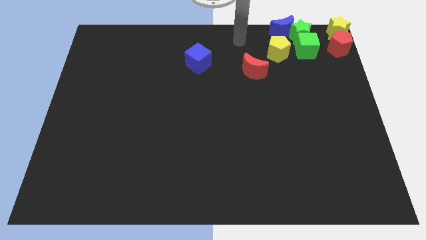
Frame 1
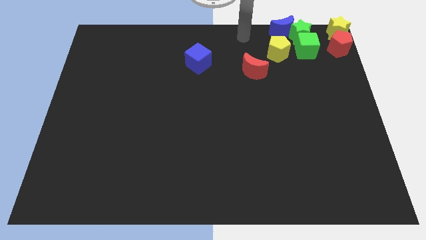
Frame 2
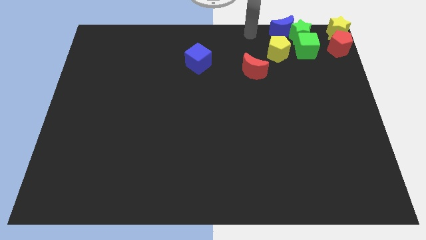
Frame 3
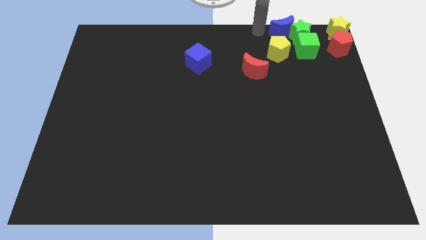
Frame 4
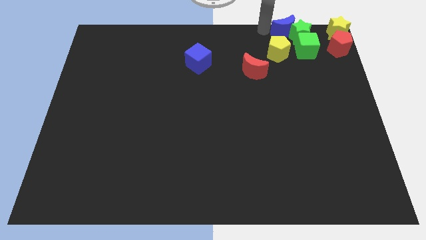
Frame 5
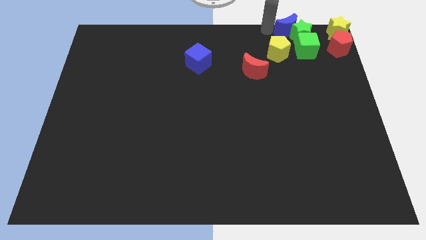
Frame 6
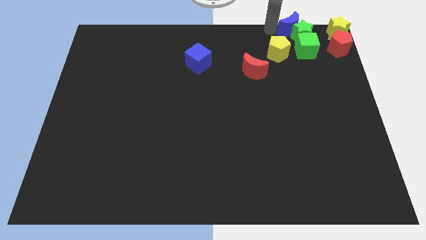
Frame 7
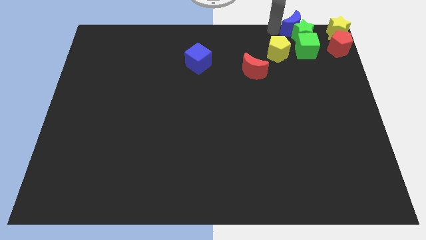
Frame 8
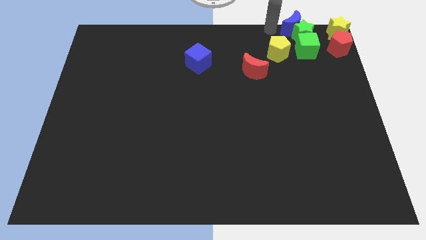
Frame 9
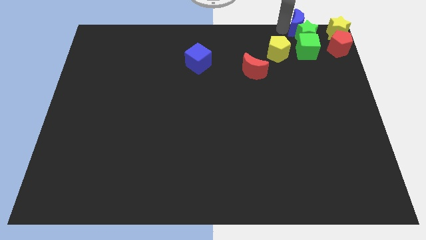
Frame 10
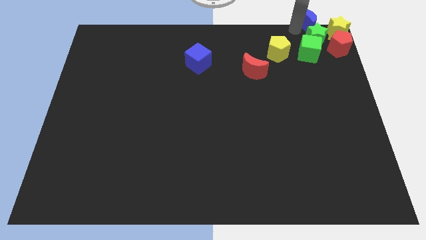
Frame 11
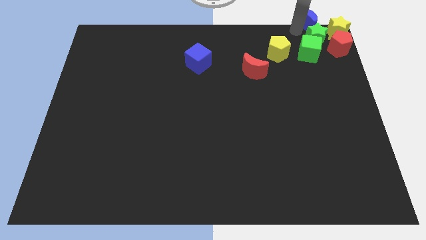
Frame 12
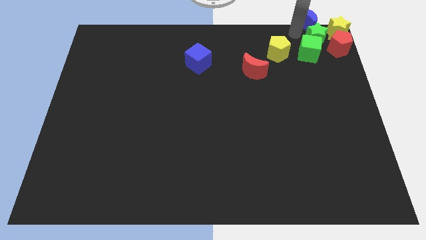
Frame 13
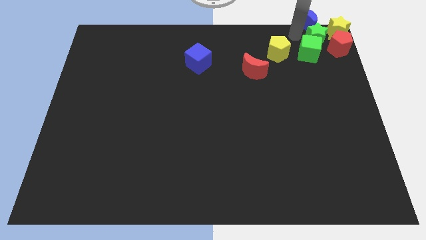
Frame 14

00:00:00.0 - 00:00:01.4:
place the blue moon above the green star

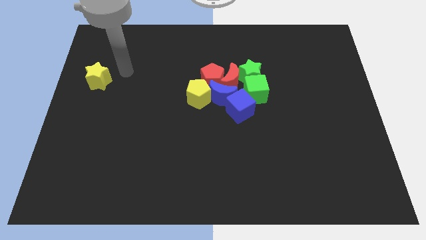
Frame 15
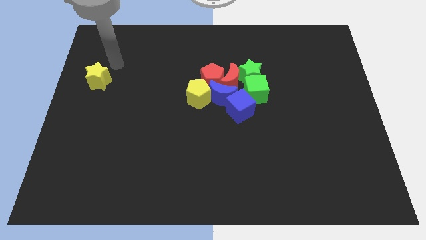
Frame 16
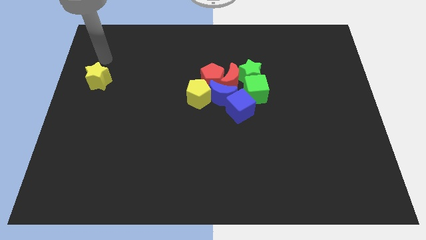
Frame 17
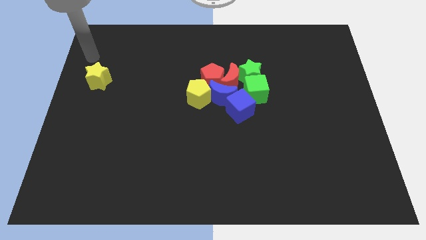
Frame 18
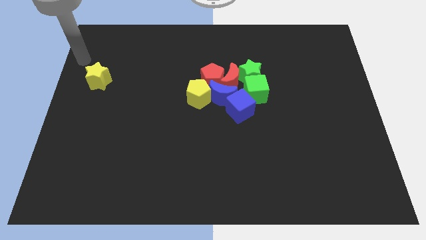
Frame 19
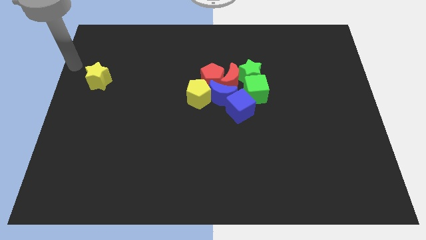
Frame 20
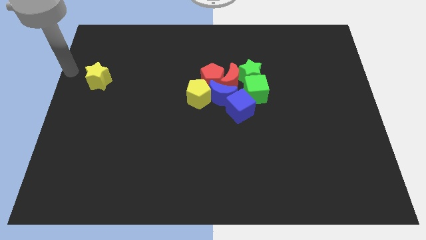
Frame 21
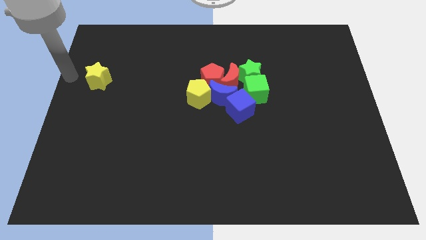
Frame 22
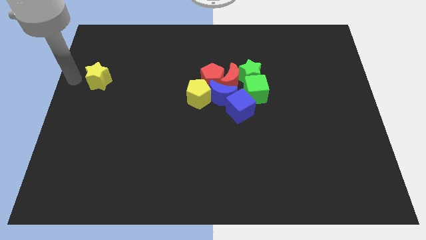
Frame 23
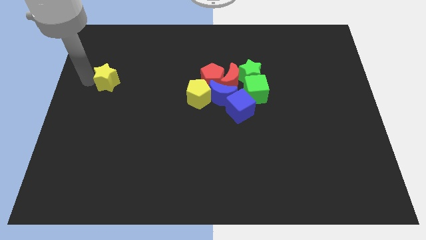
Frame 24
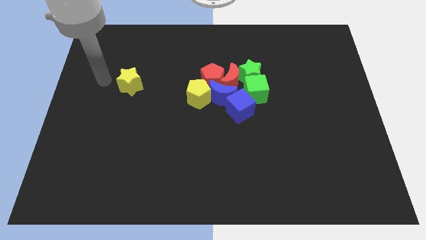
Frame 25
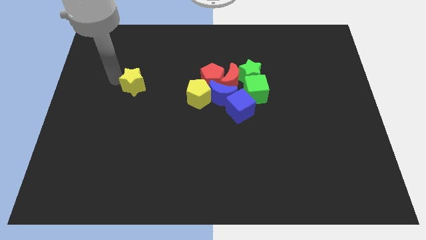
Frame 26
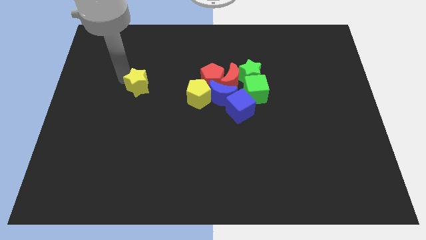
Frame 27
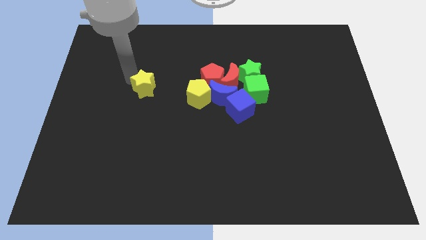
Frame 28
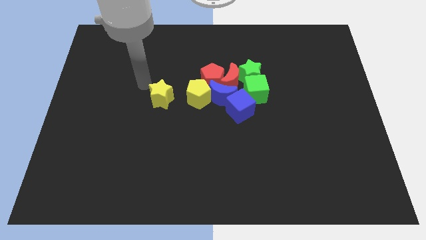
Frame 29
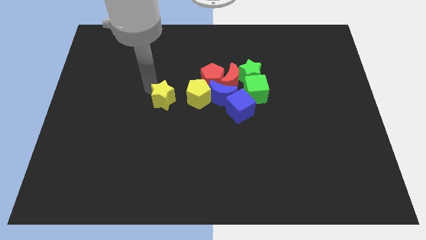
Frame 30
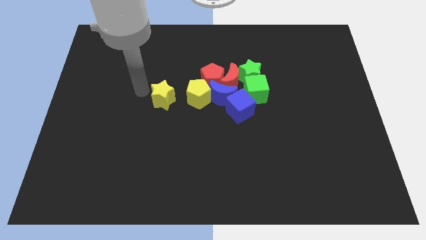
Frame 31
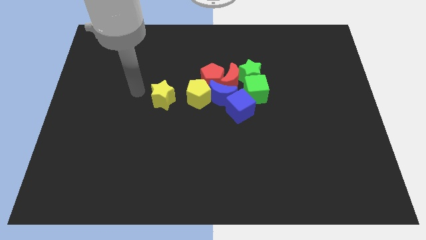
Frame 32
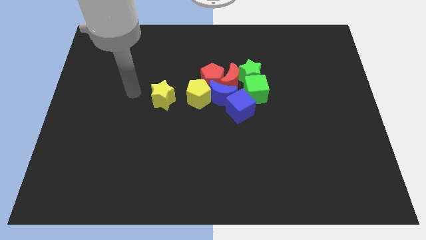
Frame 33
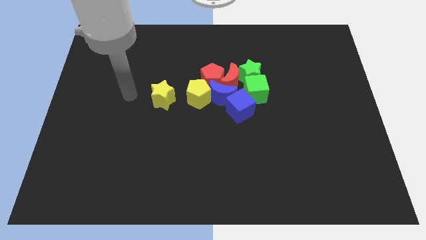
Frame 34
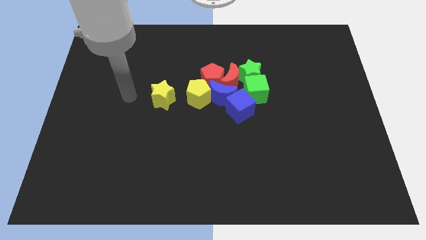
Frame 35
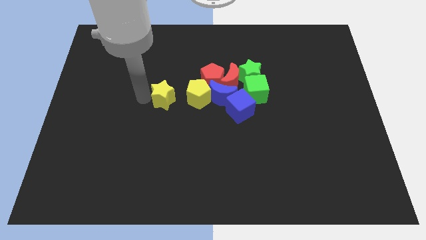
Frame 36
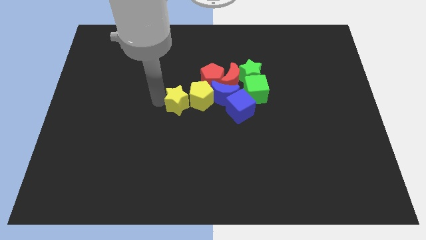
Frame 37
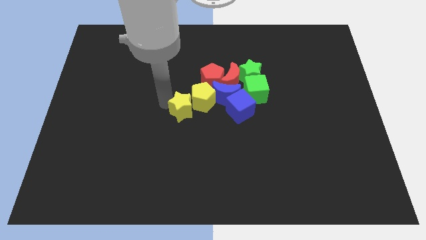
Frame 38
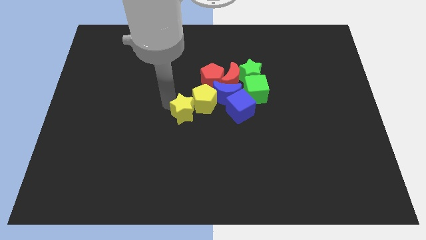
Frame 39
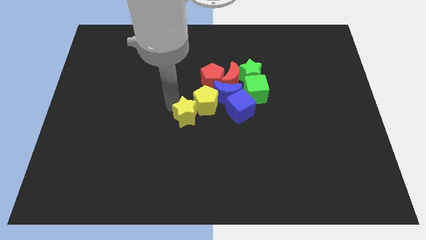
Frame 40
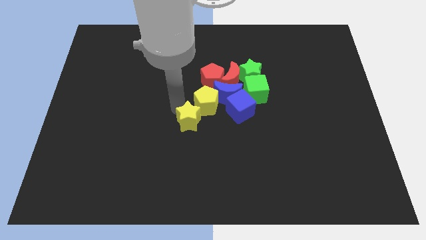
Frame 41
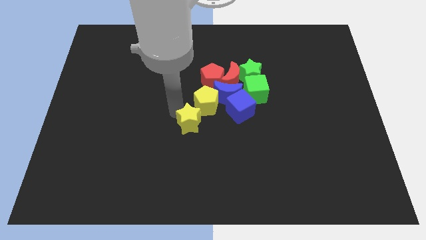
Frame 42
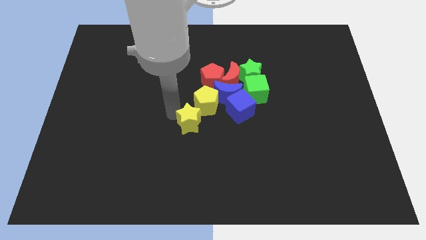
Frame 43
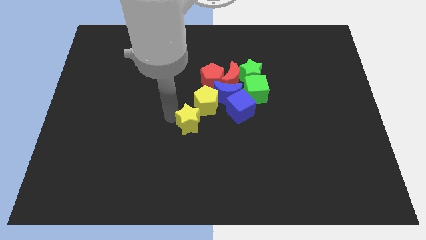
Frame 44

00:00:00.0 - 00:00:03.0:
push yellow star in to yellow pentagon

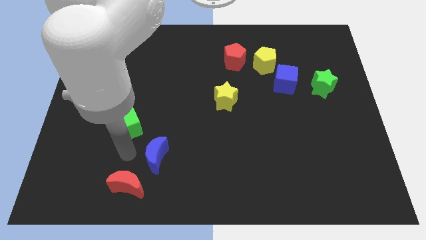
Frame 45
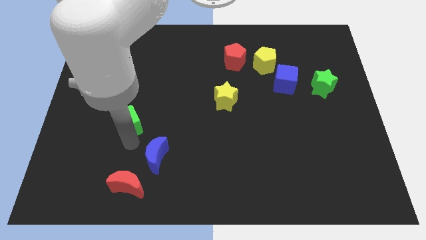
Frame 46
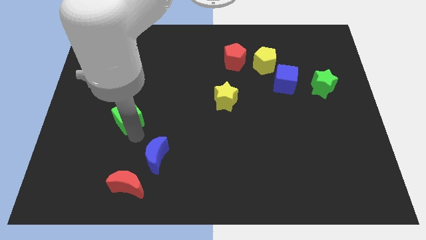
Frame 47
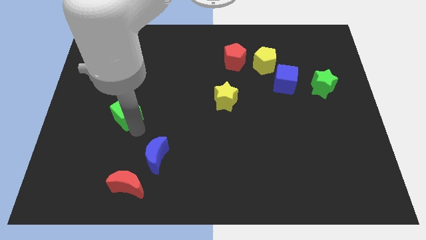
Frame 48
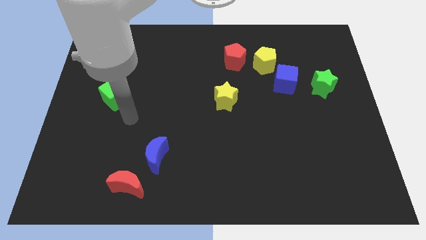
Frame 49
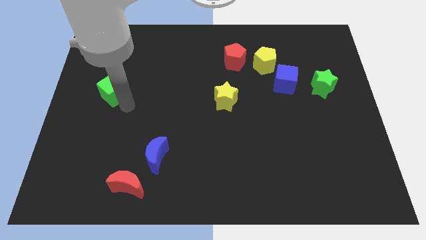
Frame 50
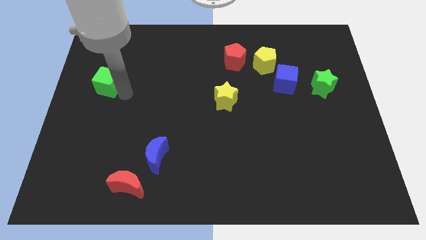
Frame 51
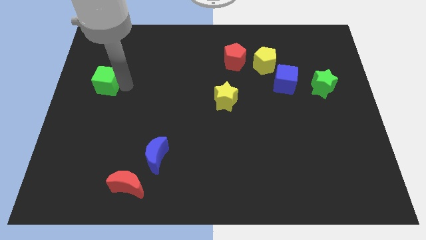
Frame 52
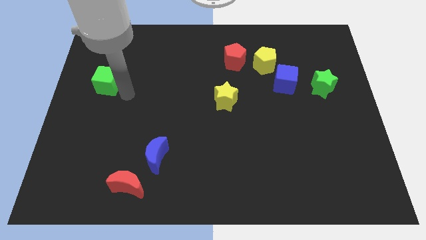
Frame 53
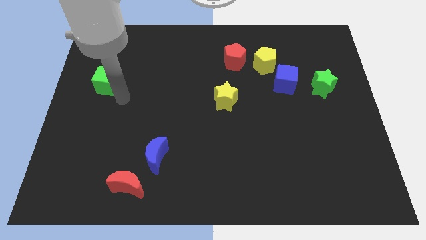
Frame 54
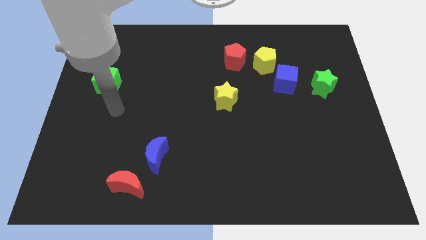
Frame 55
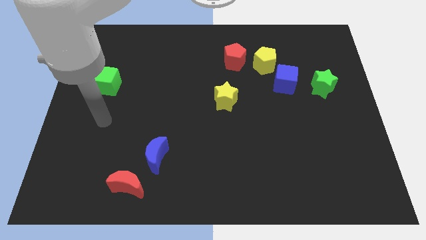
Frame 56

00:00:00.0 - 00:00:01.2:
push the green cube to the top left of the board

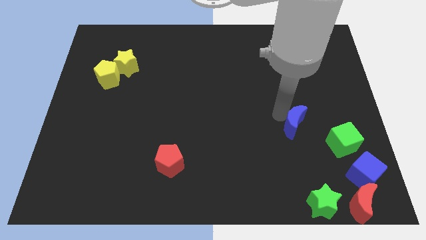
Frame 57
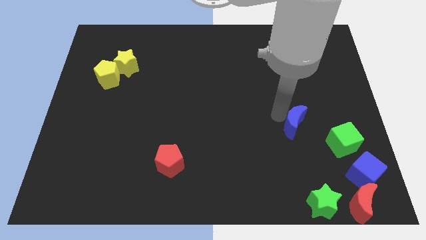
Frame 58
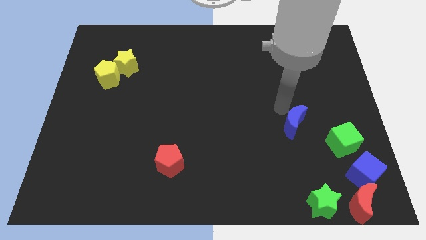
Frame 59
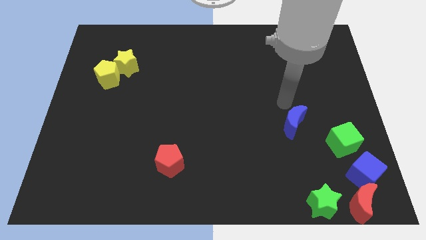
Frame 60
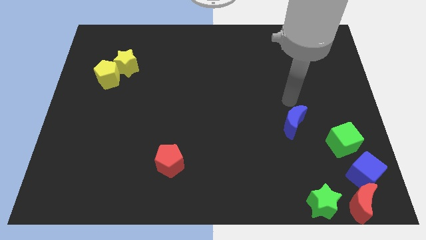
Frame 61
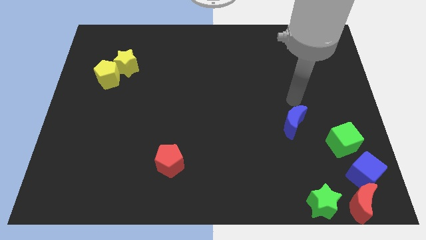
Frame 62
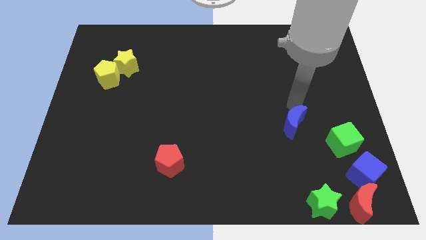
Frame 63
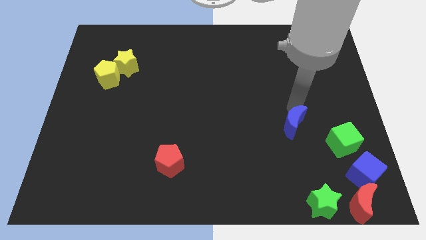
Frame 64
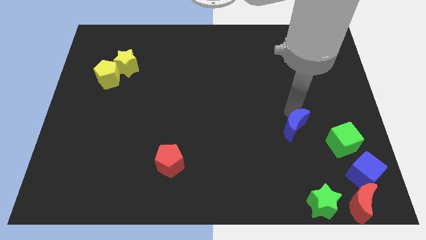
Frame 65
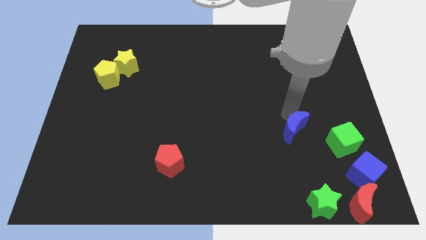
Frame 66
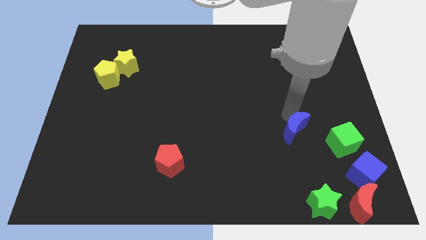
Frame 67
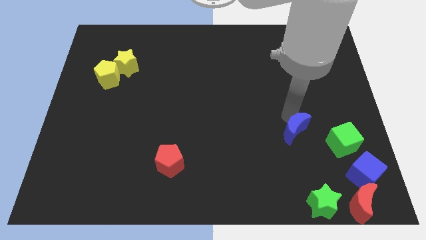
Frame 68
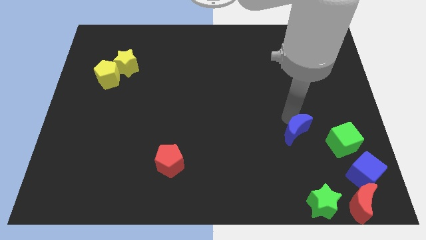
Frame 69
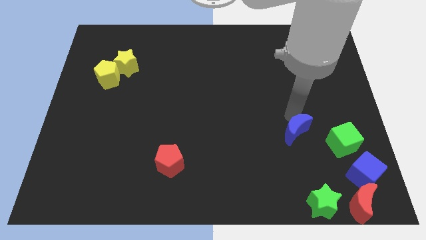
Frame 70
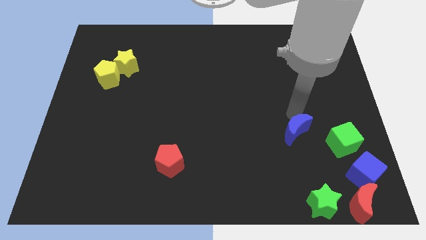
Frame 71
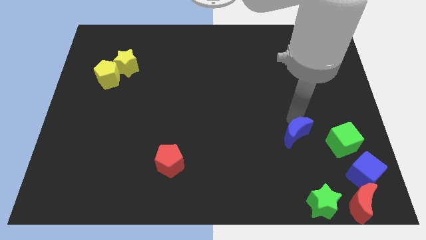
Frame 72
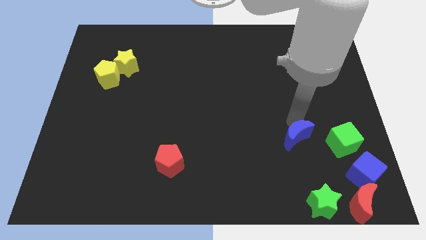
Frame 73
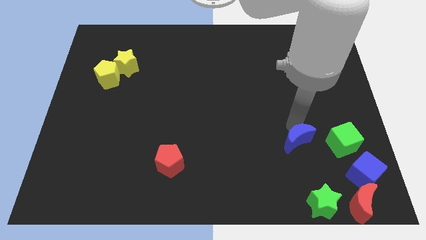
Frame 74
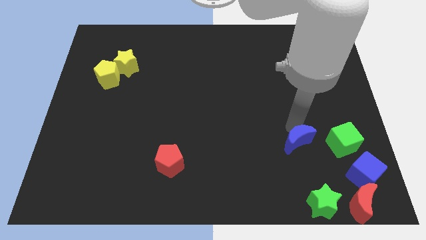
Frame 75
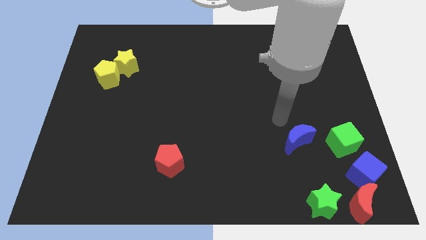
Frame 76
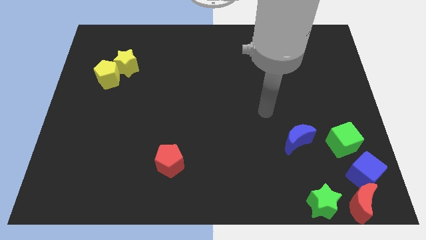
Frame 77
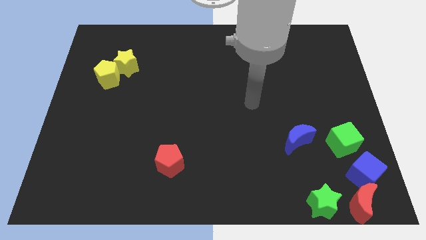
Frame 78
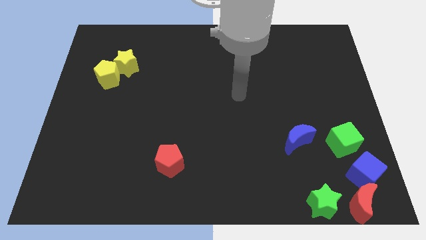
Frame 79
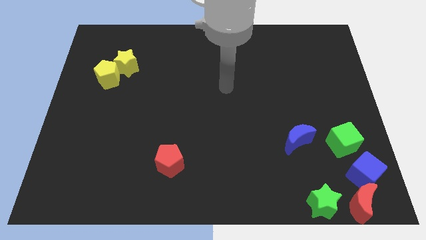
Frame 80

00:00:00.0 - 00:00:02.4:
place the blue moon to the left of the green cube

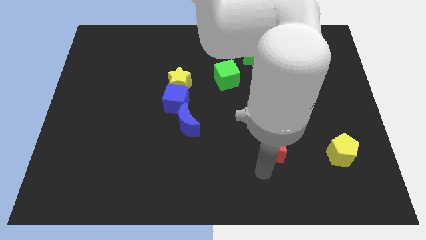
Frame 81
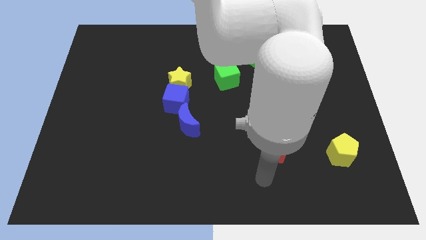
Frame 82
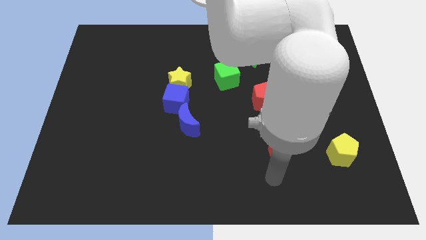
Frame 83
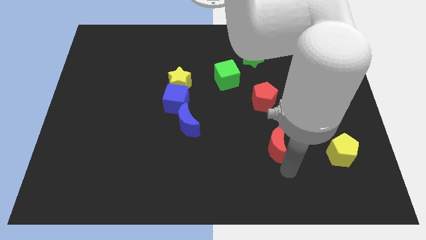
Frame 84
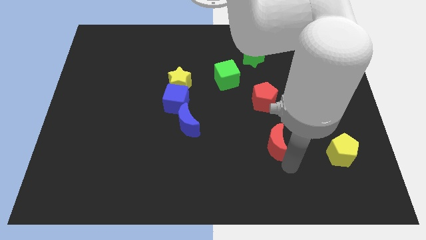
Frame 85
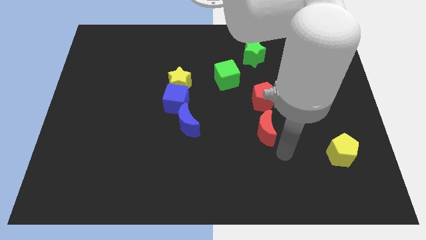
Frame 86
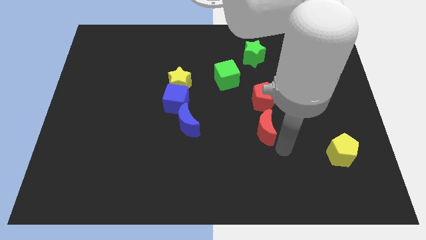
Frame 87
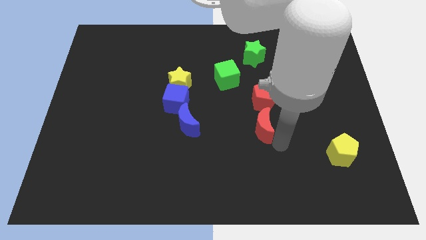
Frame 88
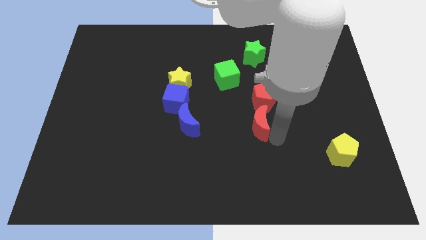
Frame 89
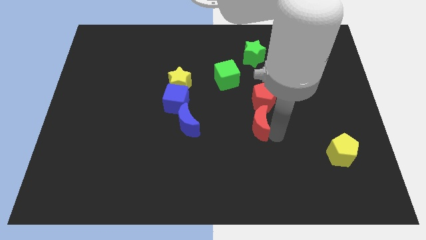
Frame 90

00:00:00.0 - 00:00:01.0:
push the red crescent close to the red pentagon
